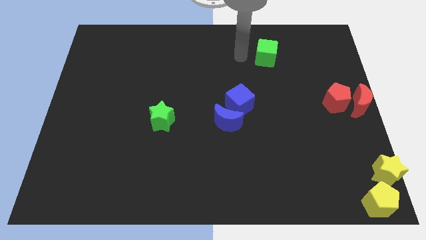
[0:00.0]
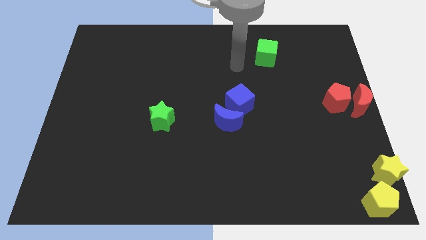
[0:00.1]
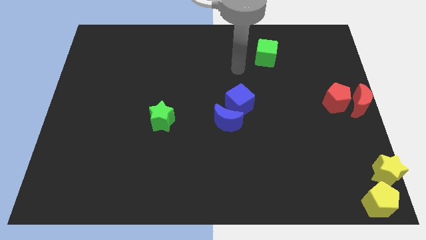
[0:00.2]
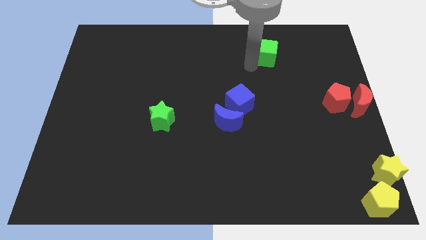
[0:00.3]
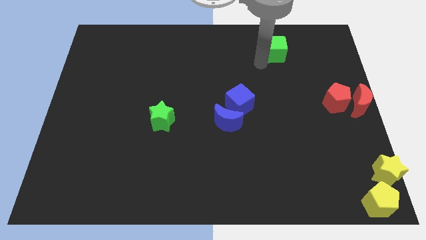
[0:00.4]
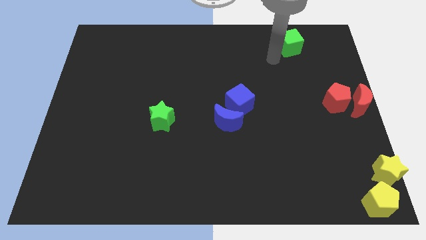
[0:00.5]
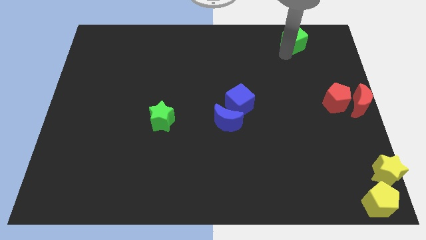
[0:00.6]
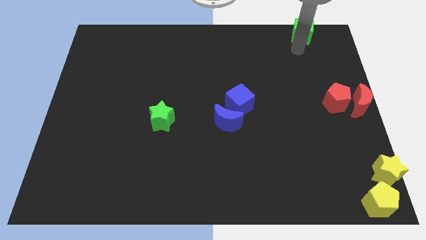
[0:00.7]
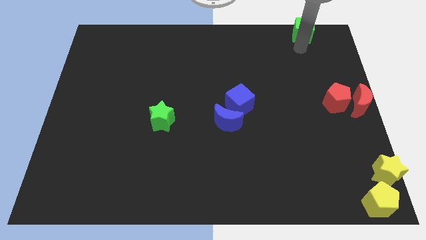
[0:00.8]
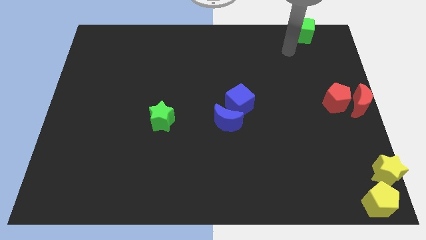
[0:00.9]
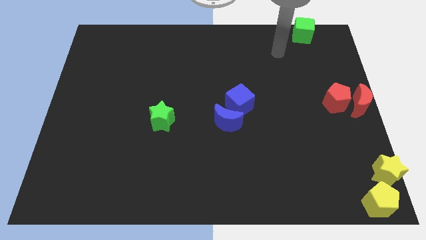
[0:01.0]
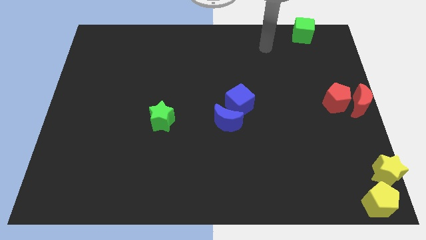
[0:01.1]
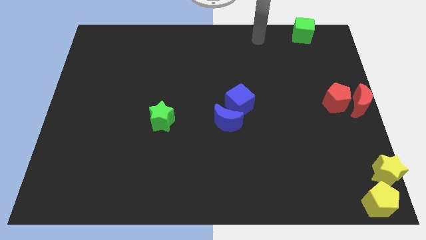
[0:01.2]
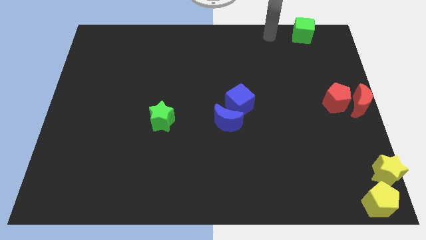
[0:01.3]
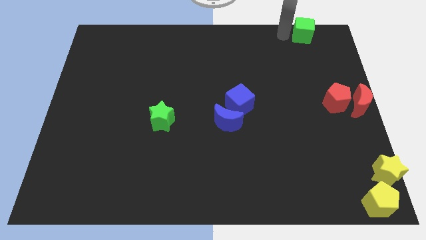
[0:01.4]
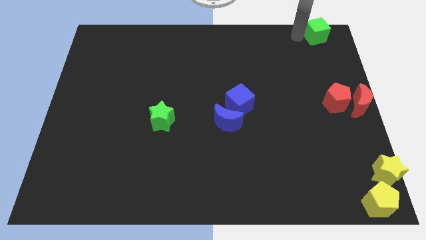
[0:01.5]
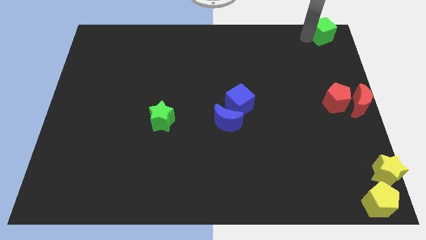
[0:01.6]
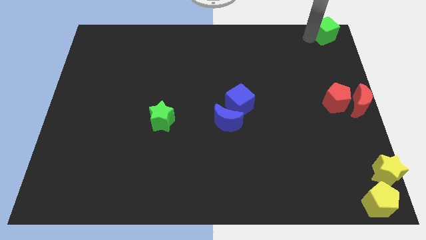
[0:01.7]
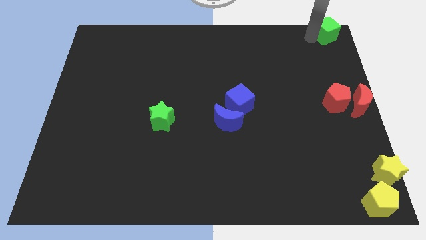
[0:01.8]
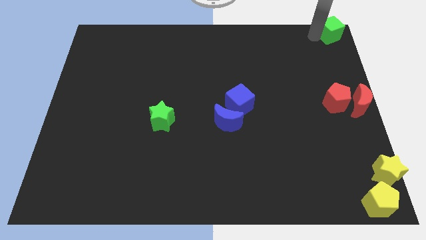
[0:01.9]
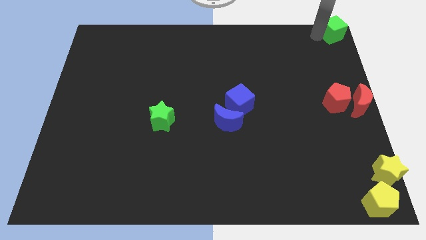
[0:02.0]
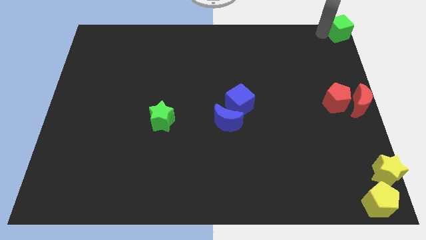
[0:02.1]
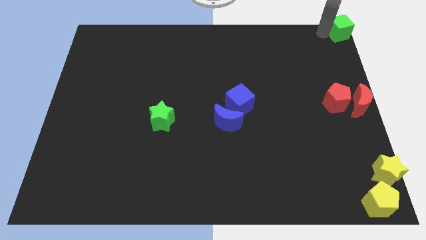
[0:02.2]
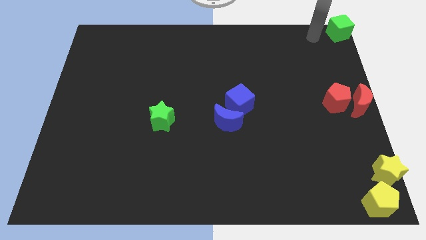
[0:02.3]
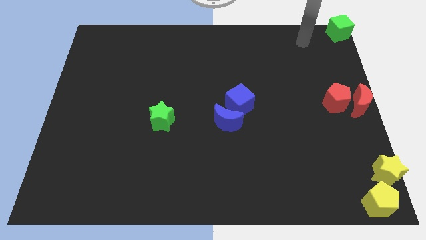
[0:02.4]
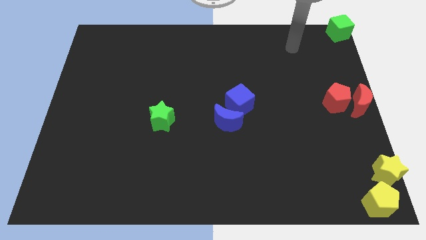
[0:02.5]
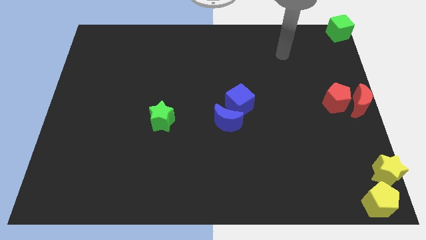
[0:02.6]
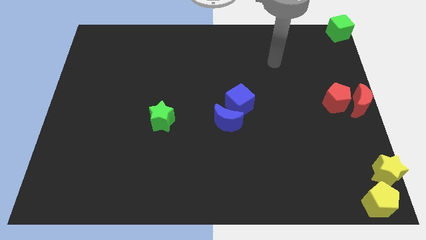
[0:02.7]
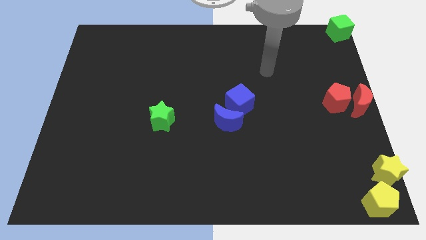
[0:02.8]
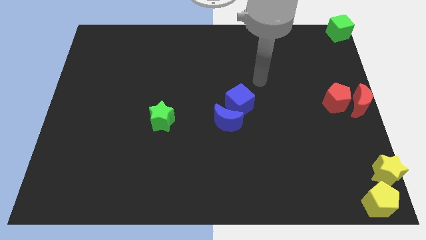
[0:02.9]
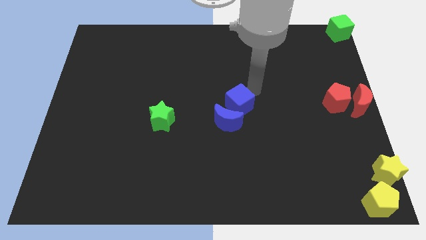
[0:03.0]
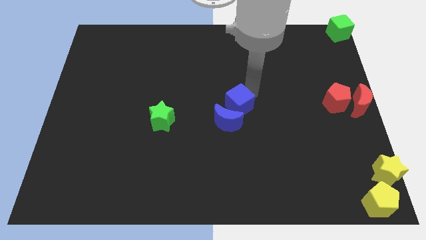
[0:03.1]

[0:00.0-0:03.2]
put the green cube at the top right corner of the board

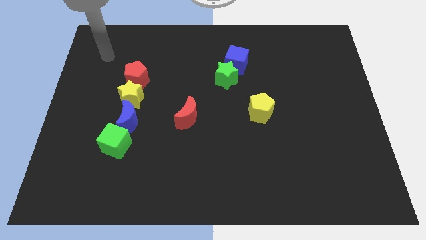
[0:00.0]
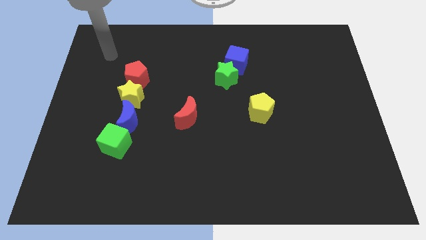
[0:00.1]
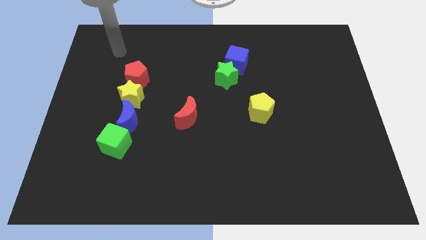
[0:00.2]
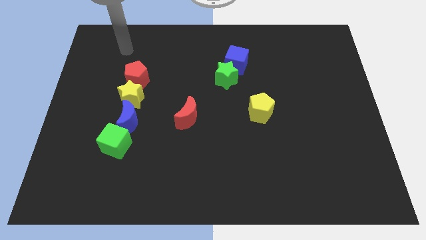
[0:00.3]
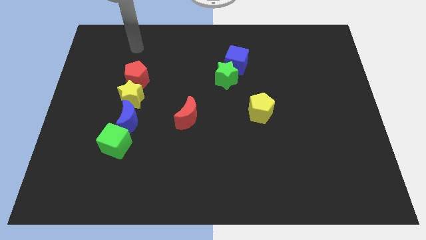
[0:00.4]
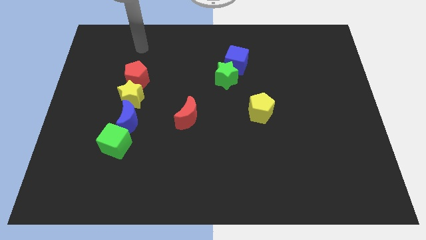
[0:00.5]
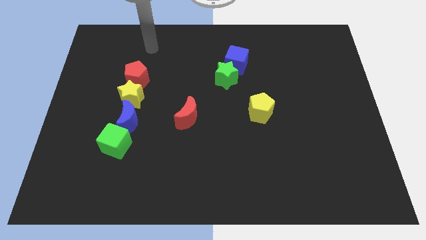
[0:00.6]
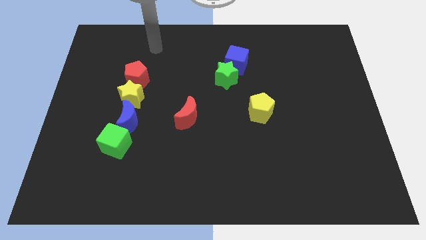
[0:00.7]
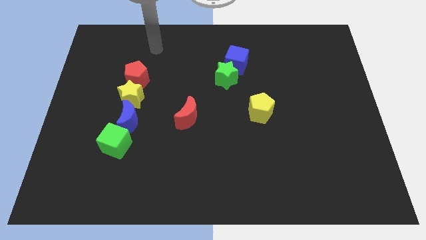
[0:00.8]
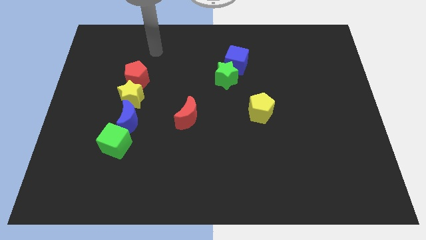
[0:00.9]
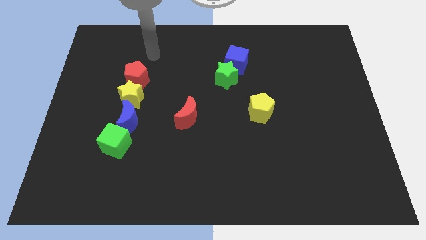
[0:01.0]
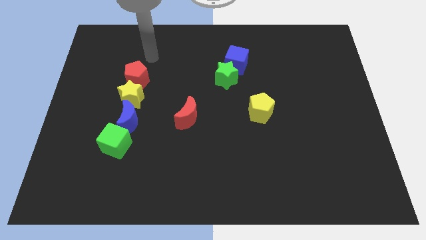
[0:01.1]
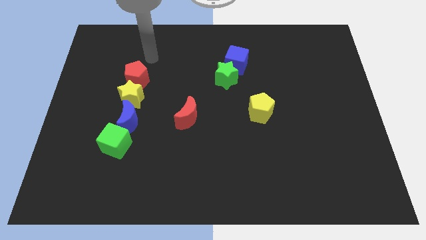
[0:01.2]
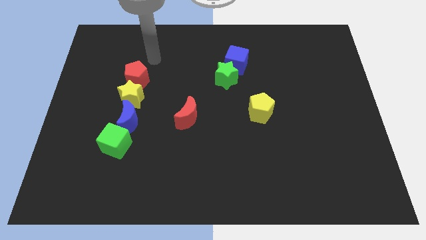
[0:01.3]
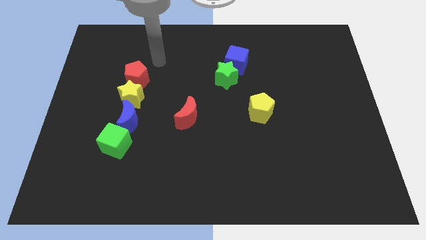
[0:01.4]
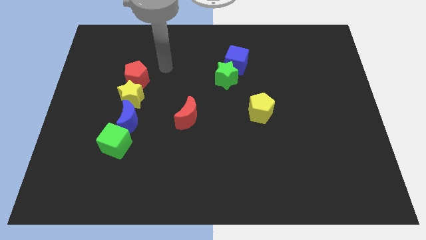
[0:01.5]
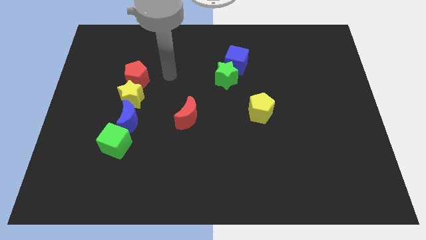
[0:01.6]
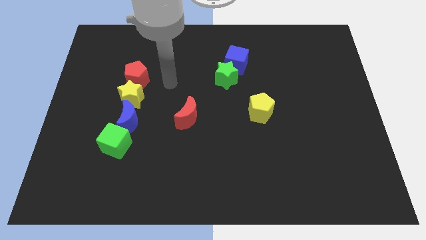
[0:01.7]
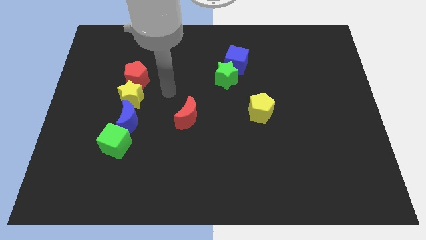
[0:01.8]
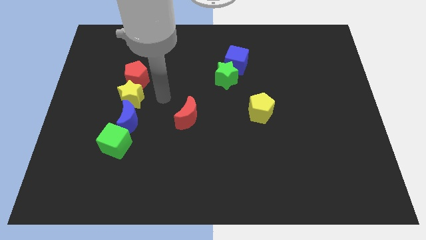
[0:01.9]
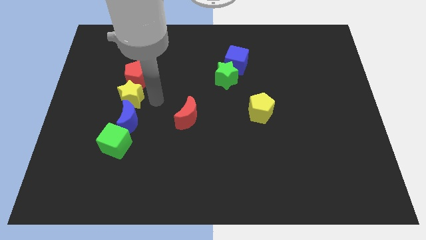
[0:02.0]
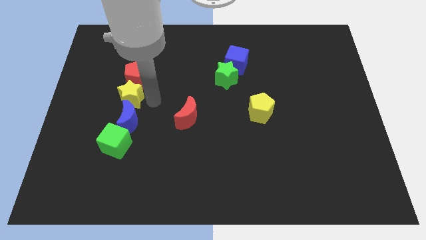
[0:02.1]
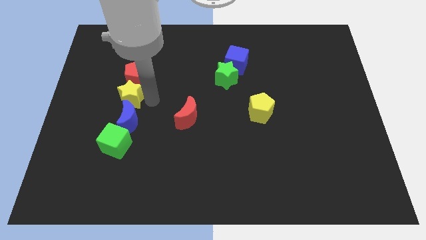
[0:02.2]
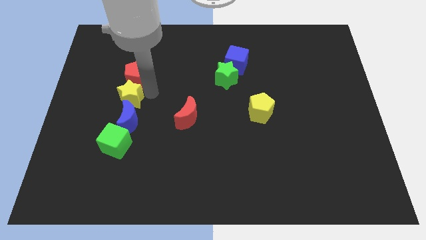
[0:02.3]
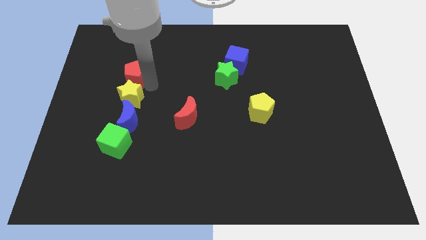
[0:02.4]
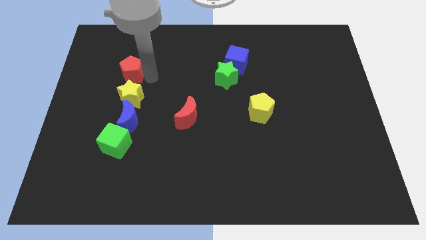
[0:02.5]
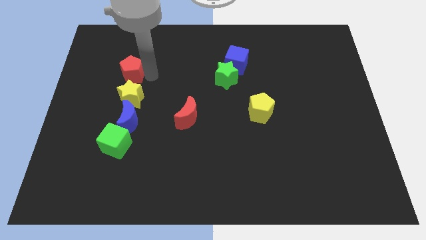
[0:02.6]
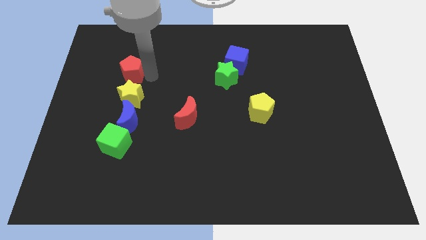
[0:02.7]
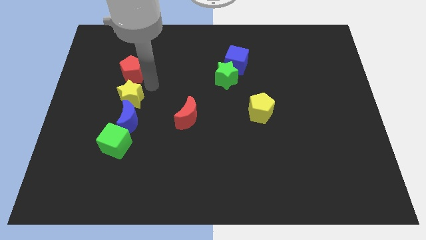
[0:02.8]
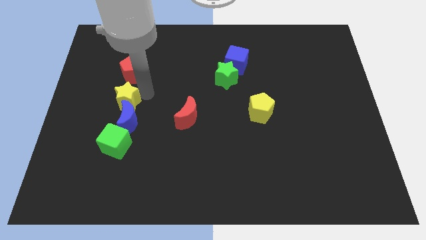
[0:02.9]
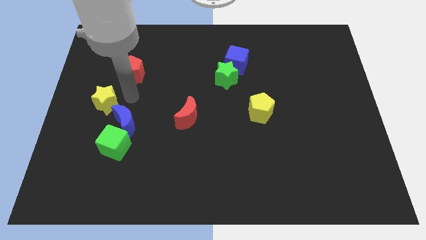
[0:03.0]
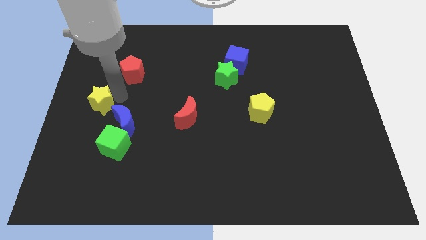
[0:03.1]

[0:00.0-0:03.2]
disturb the line which was formed by 4 blocks

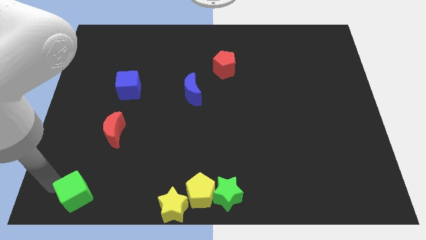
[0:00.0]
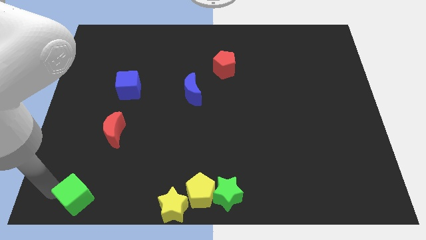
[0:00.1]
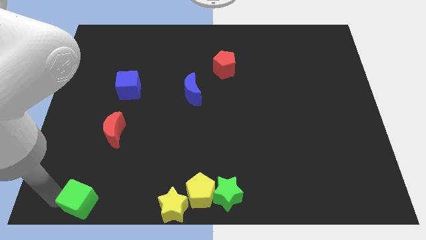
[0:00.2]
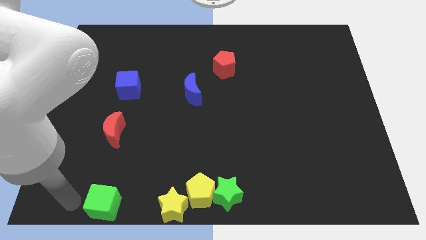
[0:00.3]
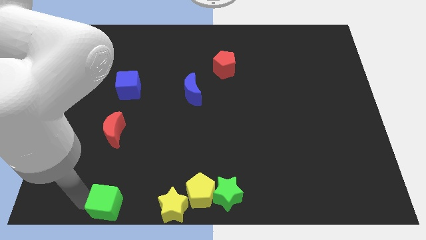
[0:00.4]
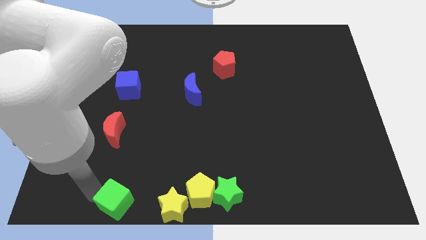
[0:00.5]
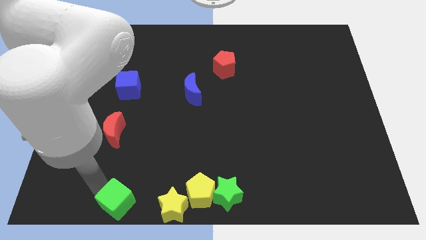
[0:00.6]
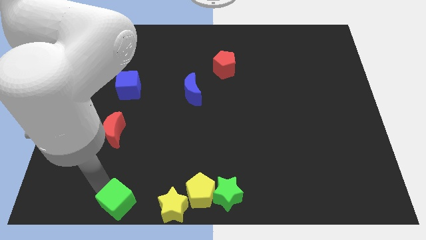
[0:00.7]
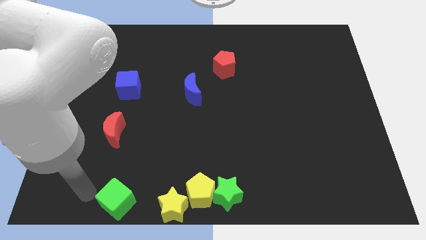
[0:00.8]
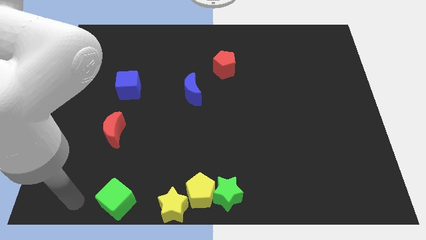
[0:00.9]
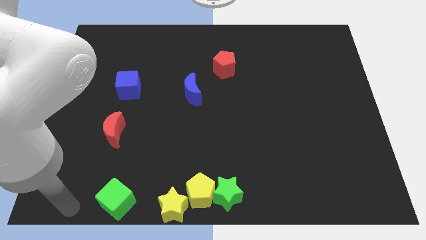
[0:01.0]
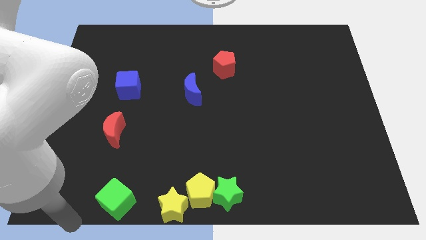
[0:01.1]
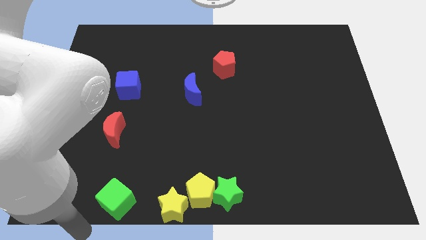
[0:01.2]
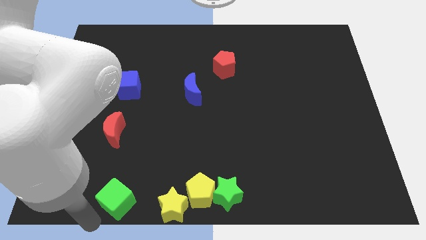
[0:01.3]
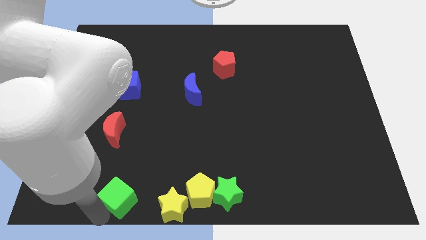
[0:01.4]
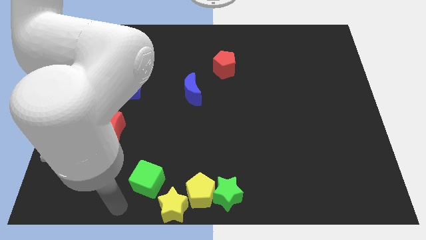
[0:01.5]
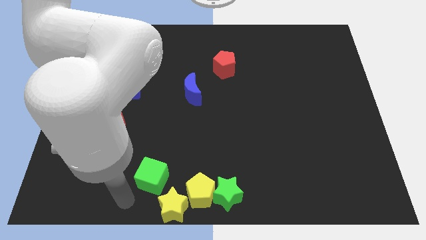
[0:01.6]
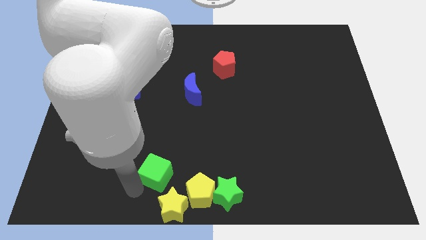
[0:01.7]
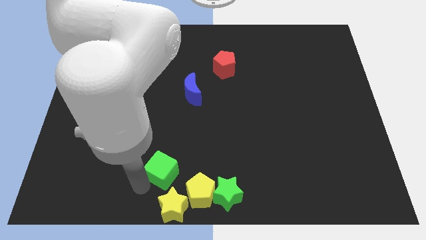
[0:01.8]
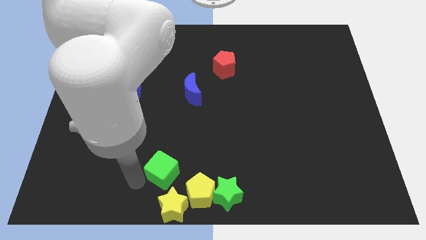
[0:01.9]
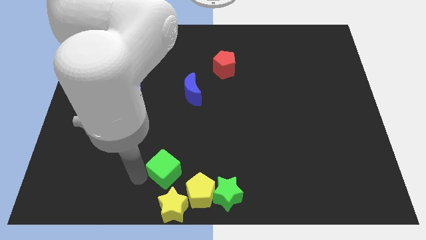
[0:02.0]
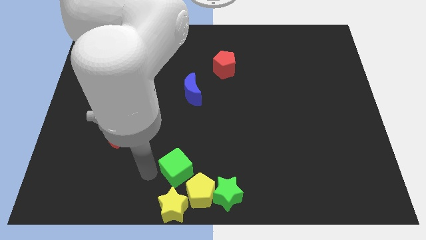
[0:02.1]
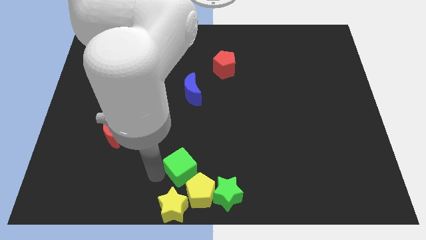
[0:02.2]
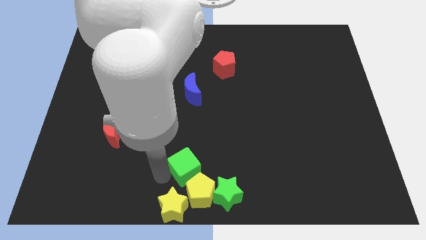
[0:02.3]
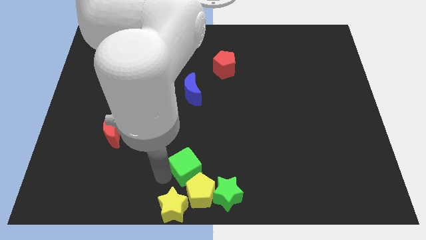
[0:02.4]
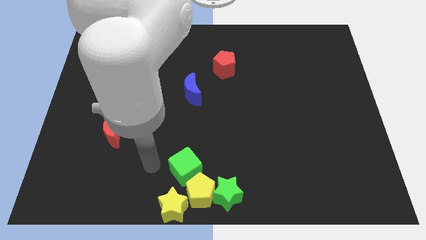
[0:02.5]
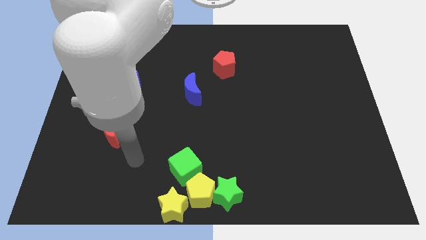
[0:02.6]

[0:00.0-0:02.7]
move green cube diagonally to the yellow pentagon
